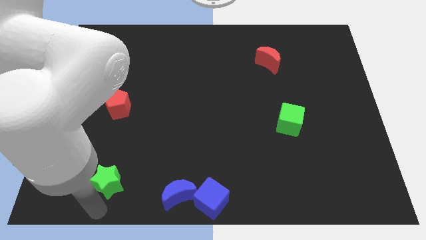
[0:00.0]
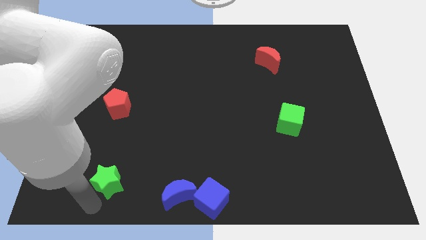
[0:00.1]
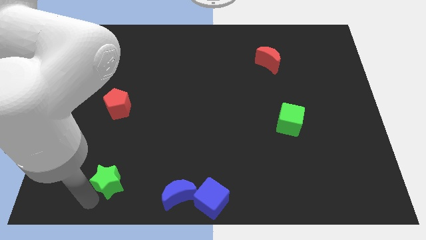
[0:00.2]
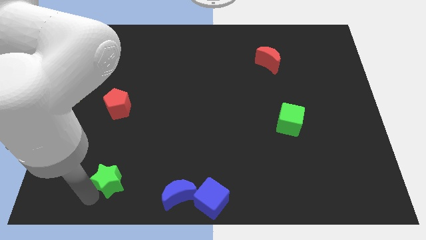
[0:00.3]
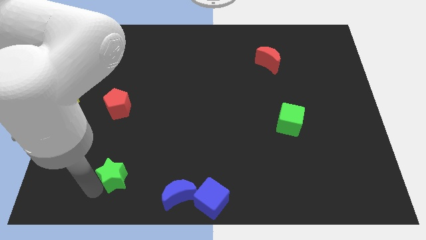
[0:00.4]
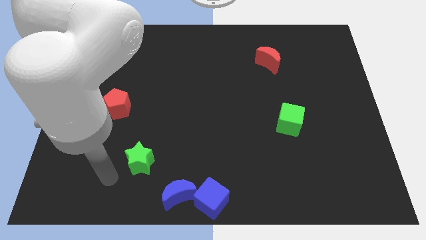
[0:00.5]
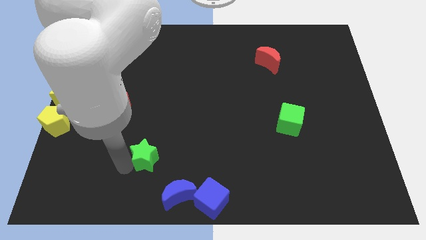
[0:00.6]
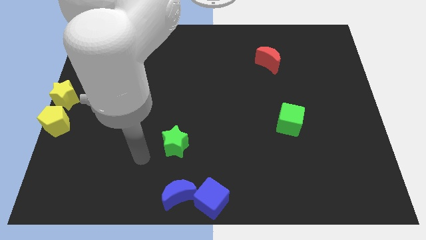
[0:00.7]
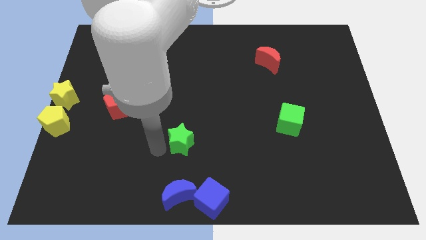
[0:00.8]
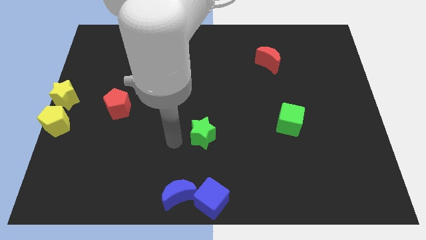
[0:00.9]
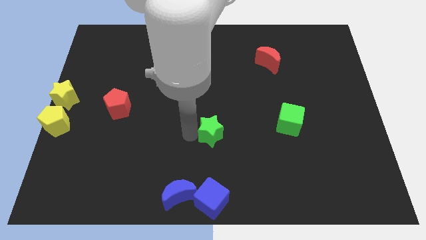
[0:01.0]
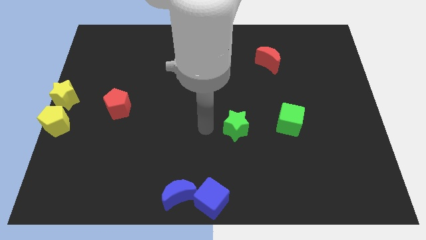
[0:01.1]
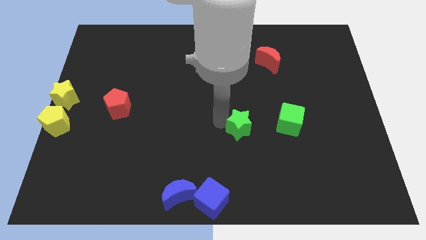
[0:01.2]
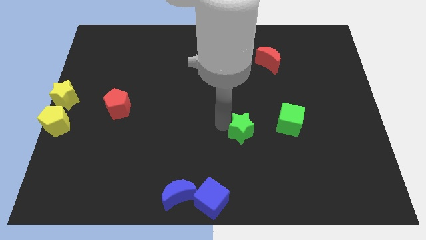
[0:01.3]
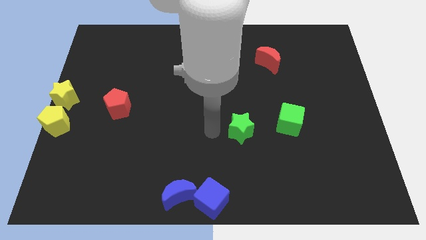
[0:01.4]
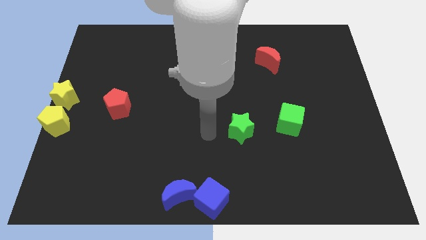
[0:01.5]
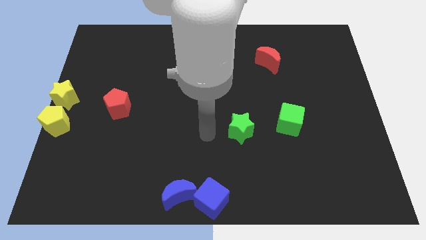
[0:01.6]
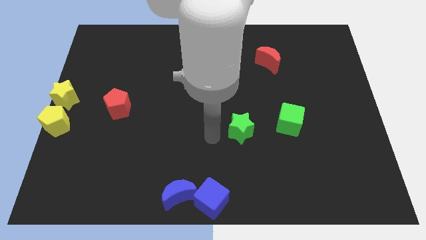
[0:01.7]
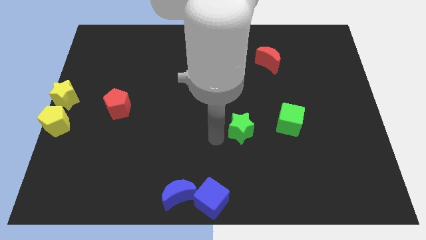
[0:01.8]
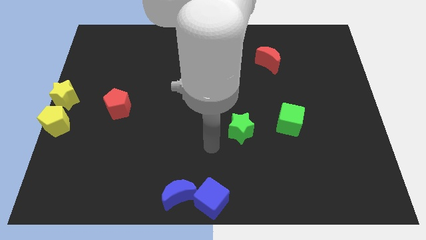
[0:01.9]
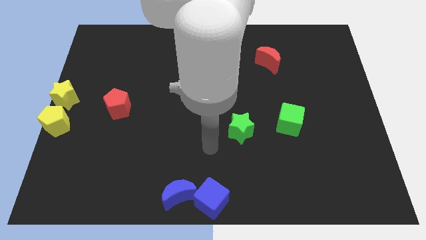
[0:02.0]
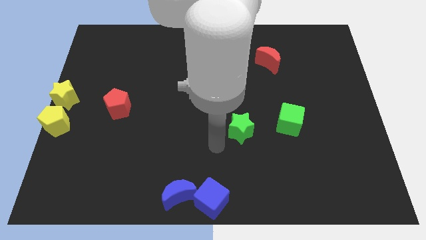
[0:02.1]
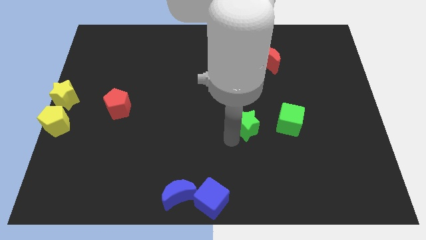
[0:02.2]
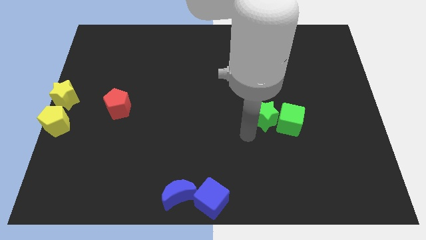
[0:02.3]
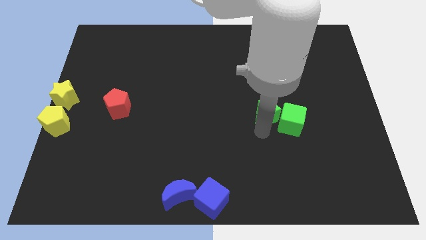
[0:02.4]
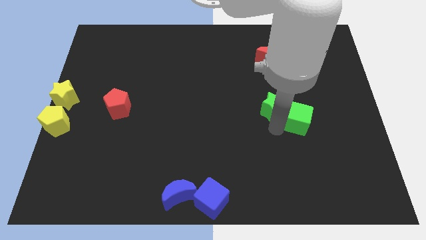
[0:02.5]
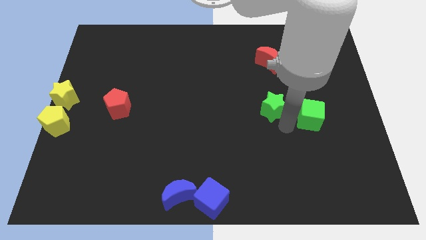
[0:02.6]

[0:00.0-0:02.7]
move green star left beside t the green cube

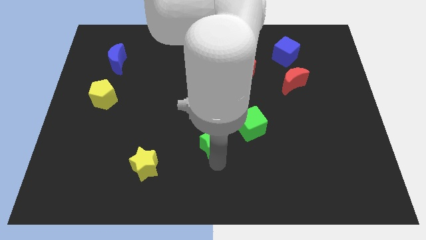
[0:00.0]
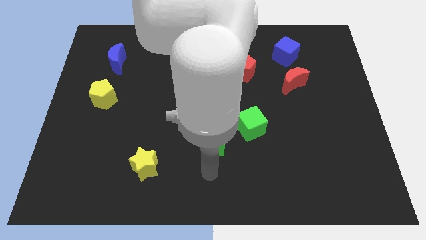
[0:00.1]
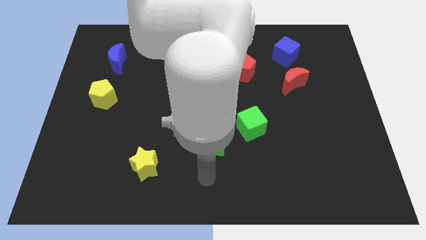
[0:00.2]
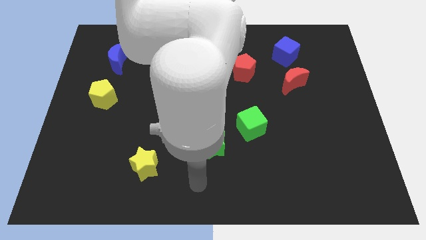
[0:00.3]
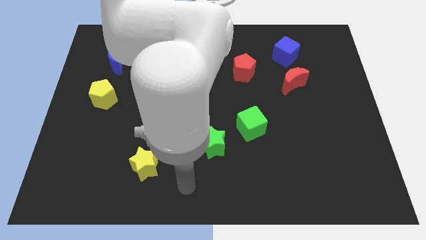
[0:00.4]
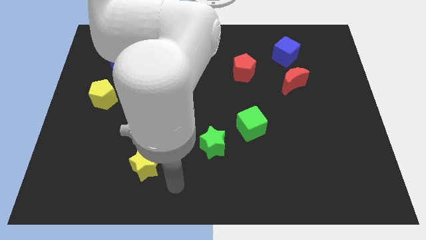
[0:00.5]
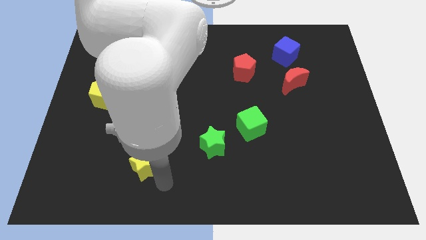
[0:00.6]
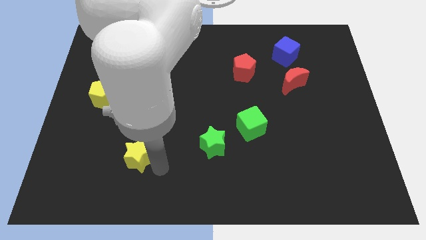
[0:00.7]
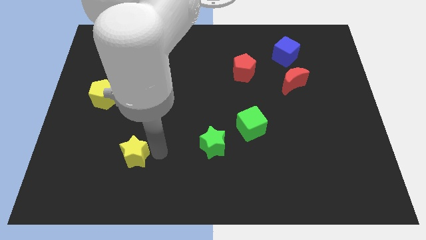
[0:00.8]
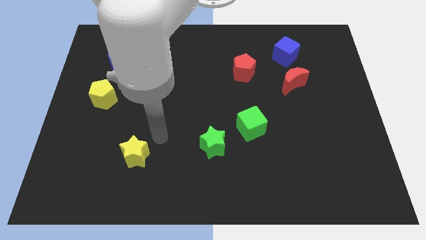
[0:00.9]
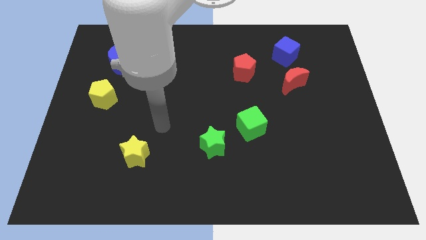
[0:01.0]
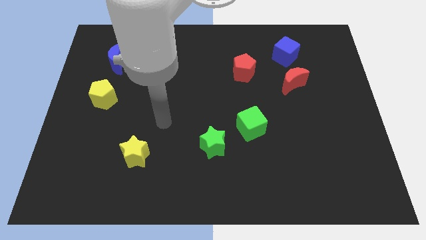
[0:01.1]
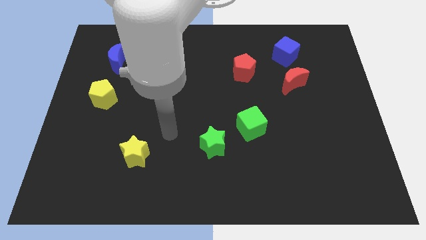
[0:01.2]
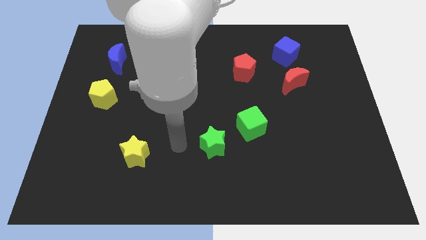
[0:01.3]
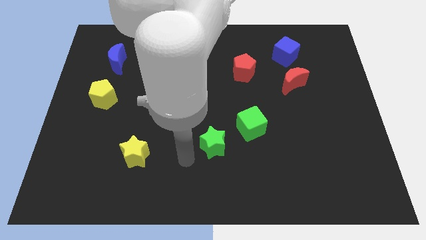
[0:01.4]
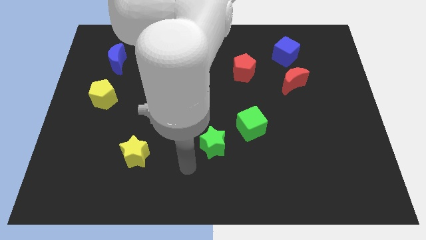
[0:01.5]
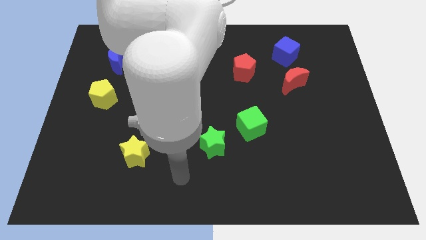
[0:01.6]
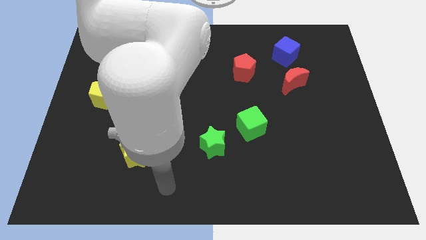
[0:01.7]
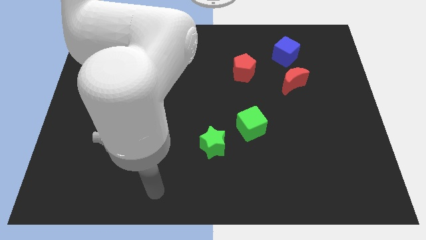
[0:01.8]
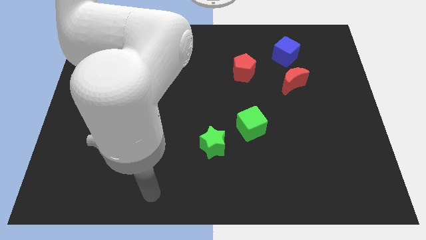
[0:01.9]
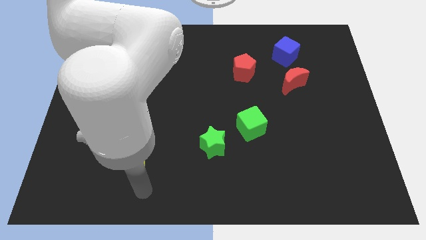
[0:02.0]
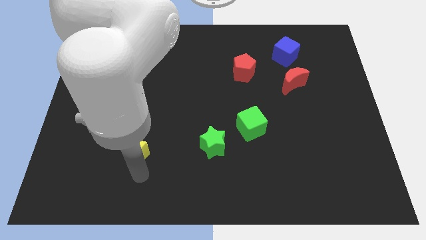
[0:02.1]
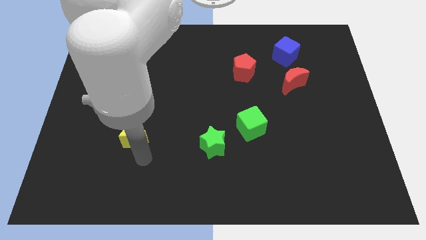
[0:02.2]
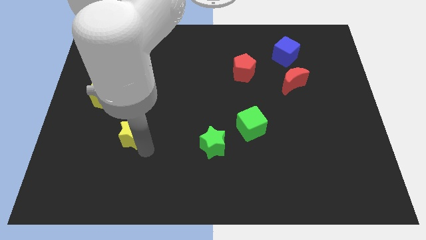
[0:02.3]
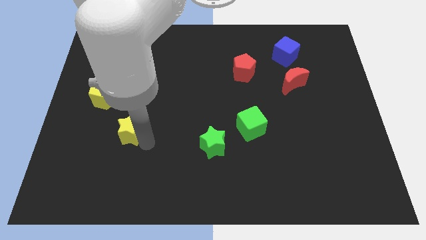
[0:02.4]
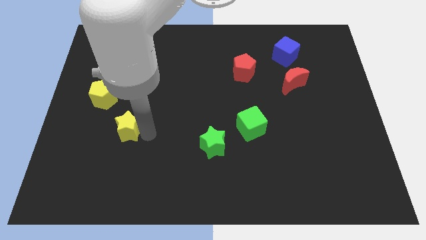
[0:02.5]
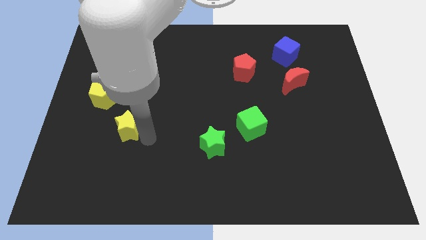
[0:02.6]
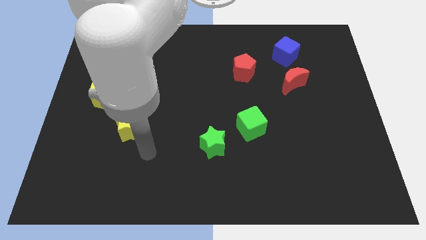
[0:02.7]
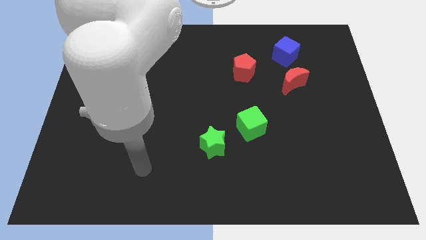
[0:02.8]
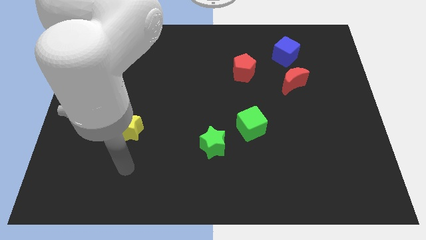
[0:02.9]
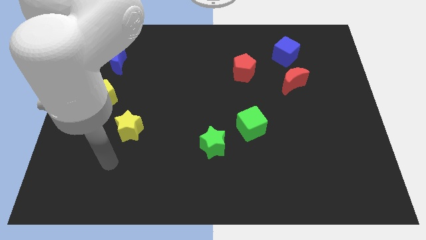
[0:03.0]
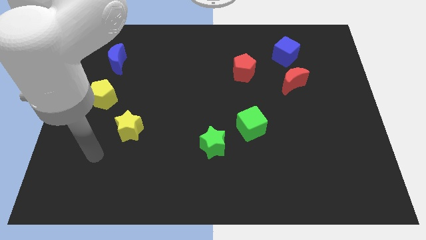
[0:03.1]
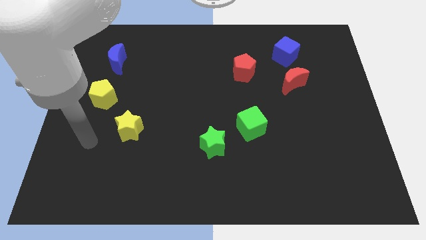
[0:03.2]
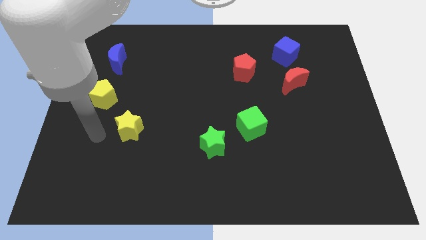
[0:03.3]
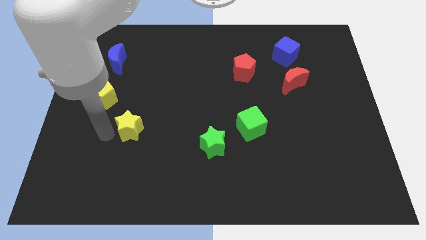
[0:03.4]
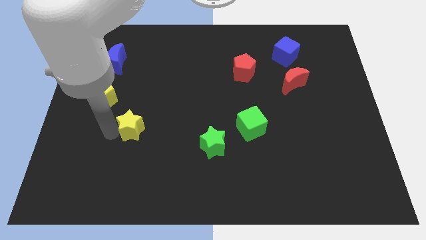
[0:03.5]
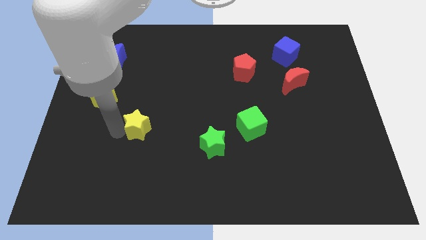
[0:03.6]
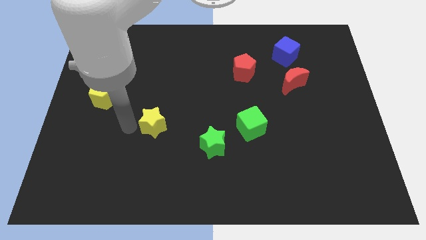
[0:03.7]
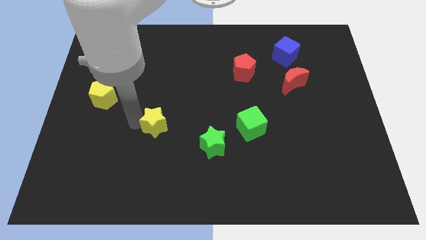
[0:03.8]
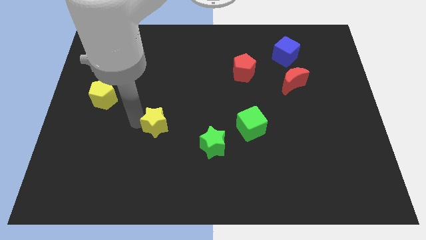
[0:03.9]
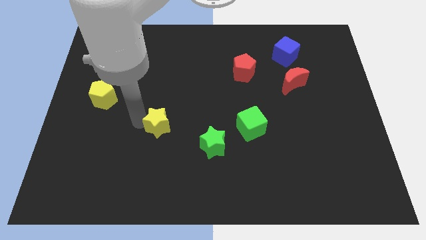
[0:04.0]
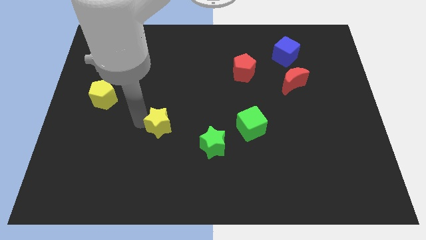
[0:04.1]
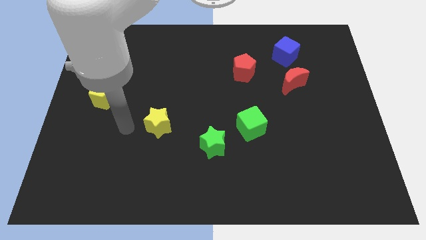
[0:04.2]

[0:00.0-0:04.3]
place the yellow star in between the yellow pentagon and green star

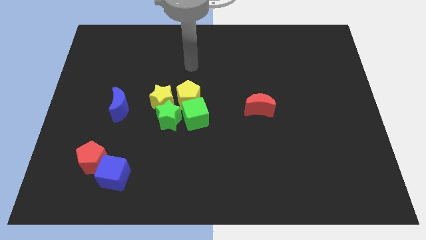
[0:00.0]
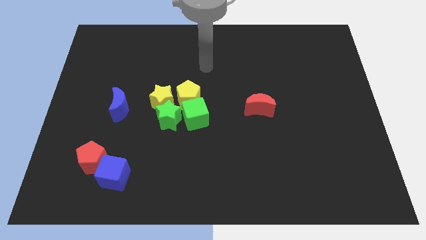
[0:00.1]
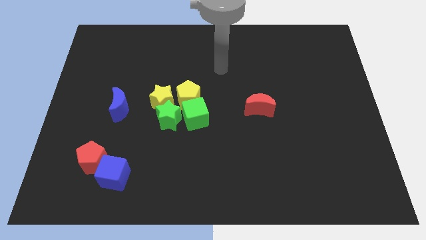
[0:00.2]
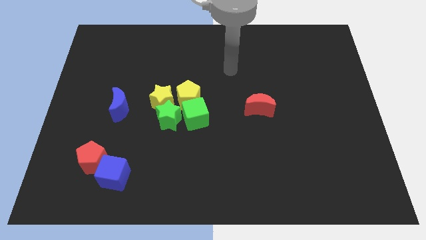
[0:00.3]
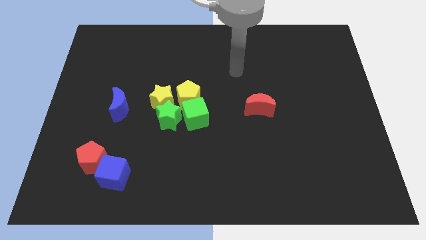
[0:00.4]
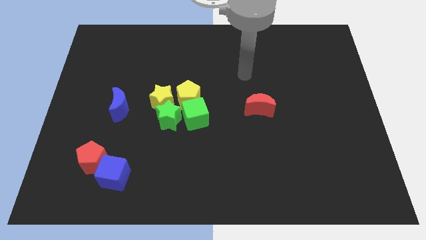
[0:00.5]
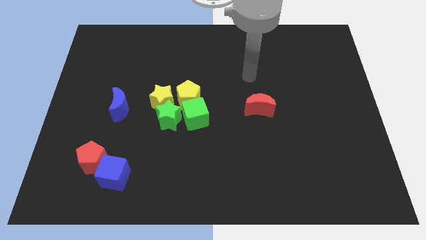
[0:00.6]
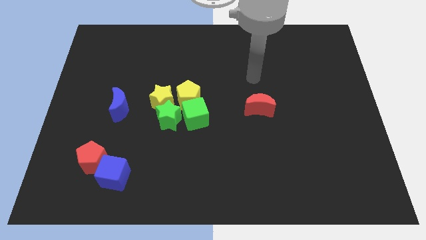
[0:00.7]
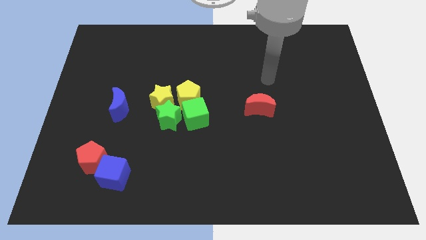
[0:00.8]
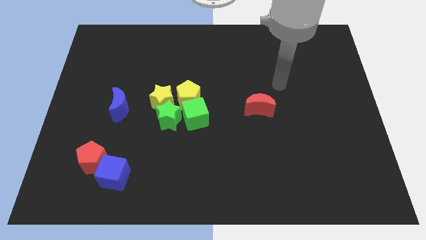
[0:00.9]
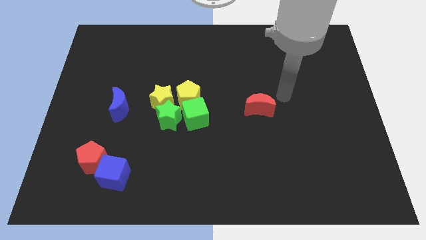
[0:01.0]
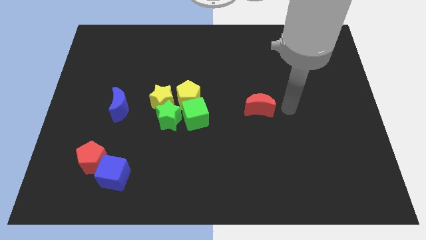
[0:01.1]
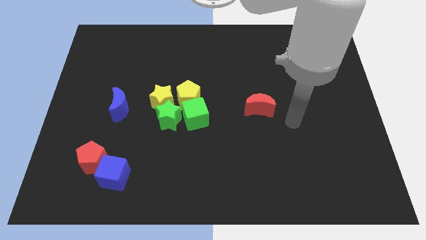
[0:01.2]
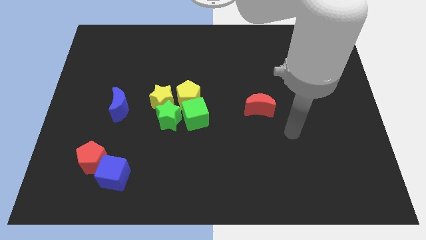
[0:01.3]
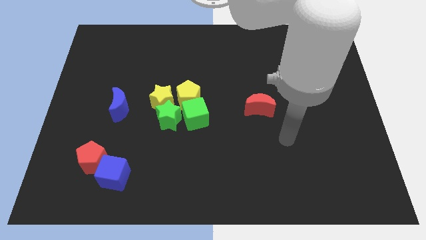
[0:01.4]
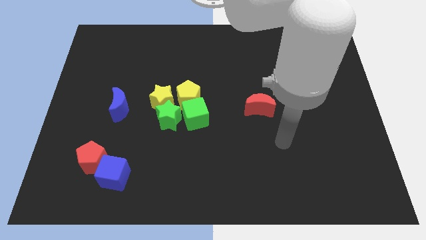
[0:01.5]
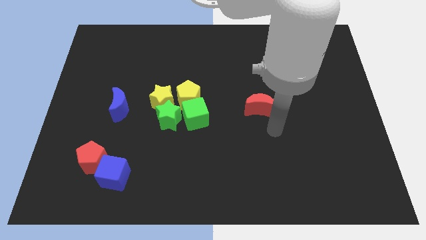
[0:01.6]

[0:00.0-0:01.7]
move the arm near to the red crescent

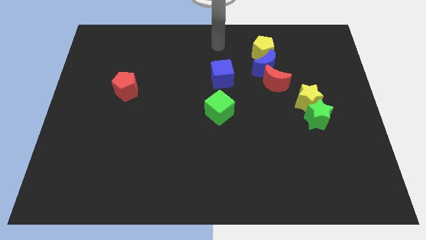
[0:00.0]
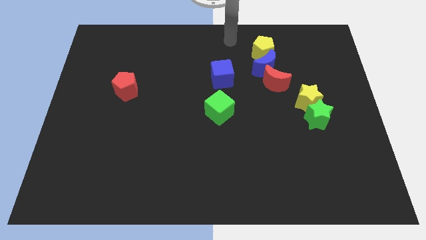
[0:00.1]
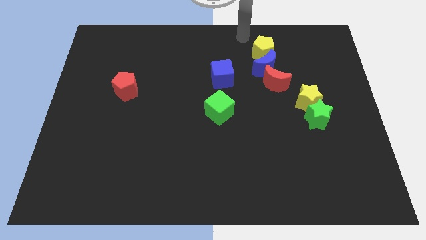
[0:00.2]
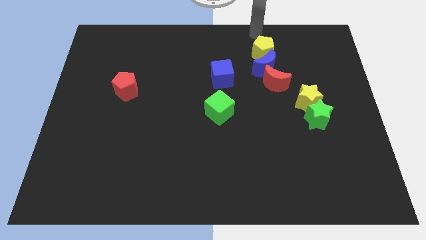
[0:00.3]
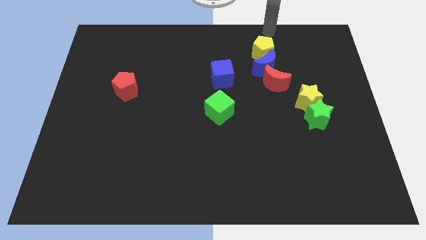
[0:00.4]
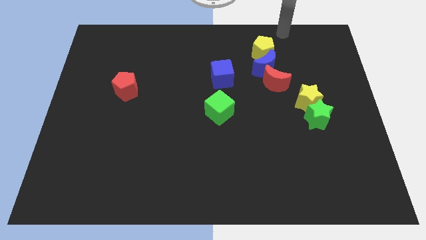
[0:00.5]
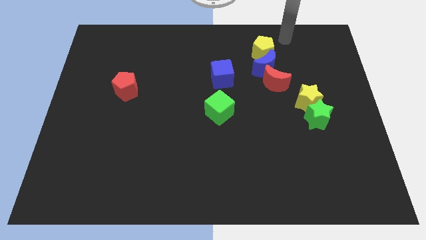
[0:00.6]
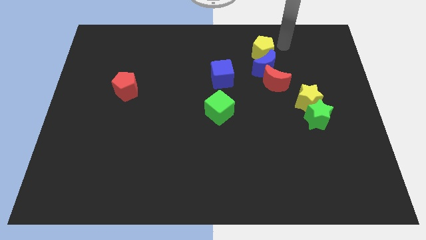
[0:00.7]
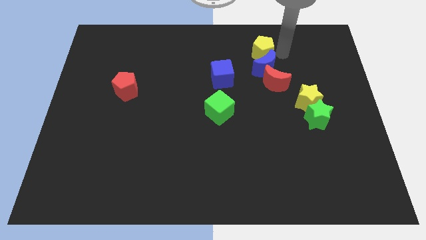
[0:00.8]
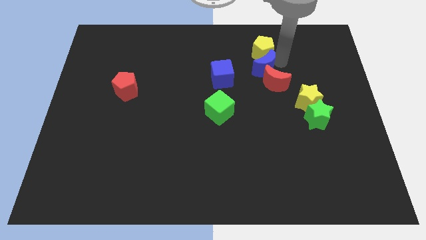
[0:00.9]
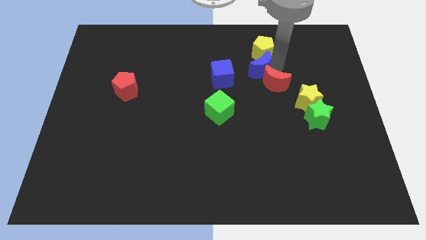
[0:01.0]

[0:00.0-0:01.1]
place your arm right to blue moon
